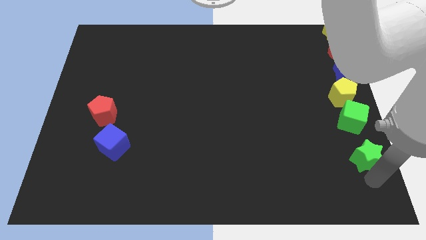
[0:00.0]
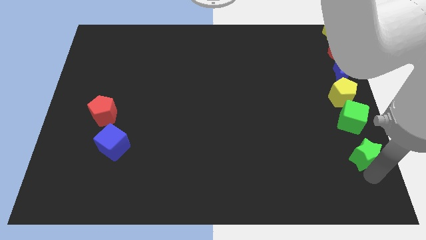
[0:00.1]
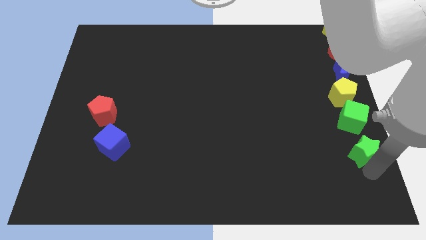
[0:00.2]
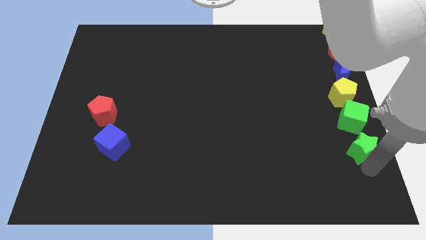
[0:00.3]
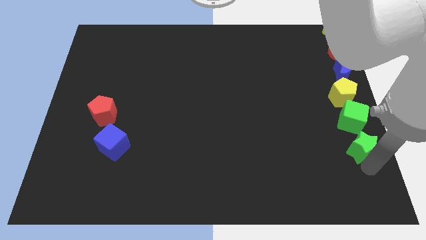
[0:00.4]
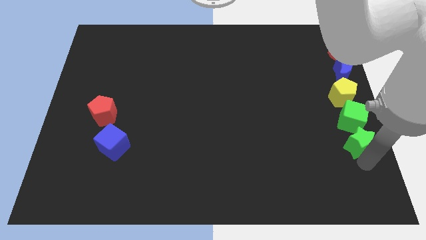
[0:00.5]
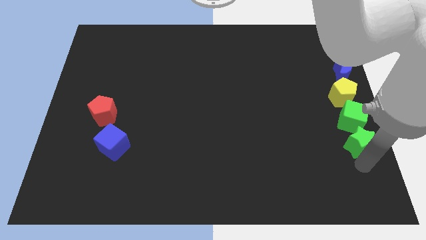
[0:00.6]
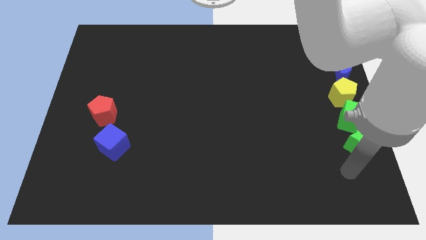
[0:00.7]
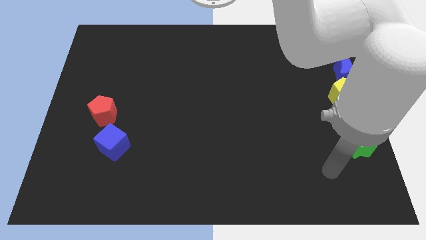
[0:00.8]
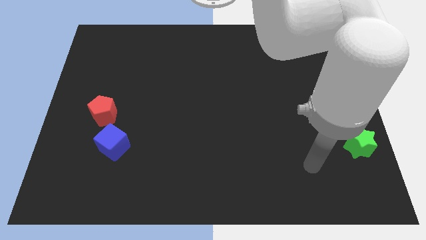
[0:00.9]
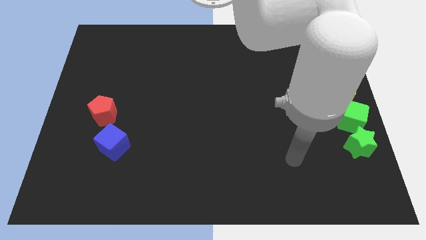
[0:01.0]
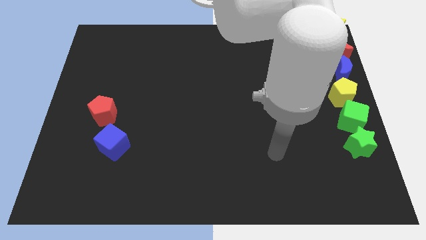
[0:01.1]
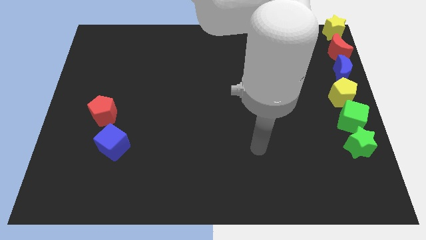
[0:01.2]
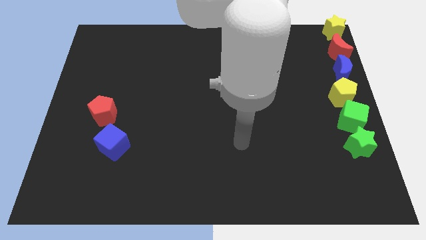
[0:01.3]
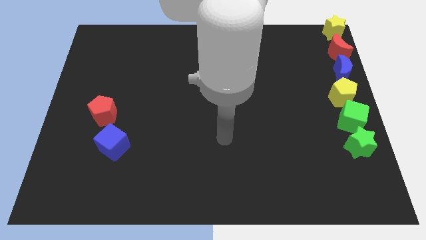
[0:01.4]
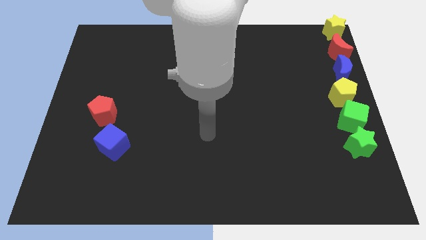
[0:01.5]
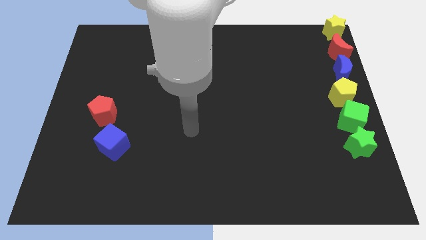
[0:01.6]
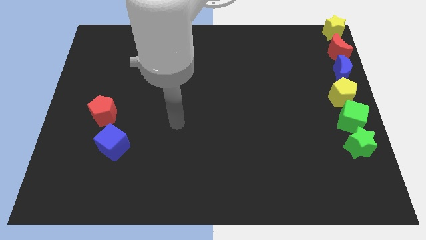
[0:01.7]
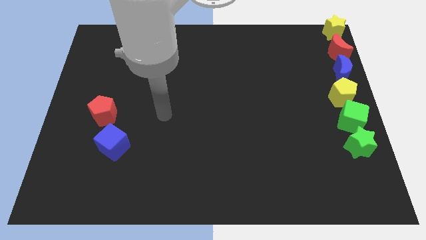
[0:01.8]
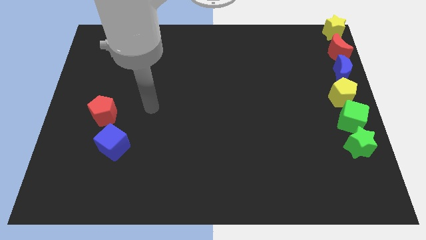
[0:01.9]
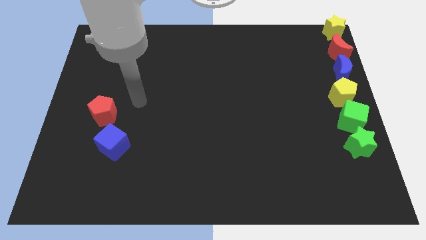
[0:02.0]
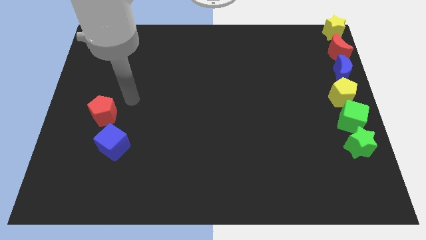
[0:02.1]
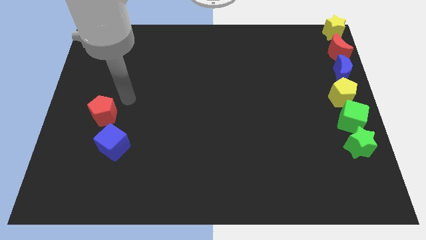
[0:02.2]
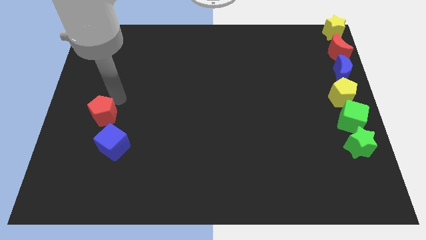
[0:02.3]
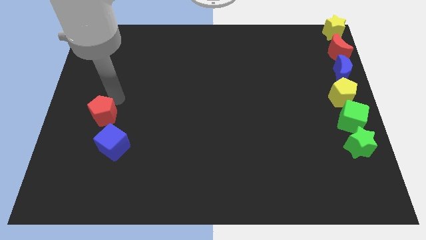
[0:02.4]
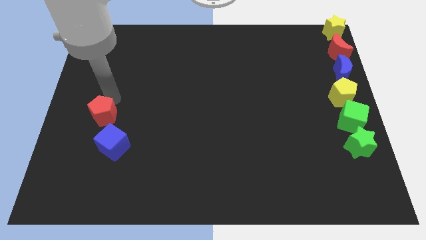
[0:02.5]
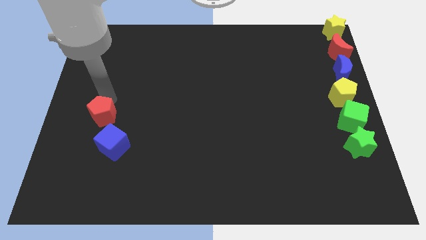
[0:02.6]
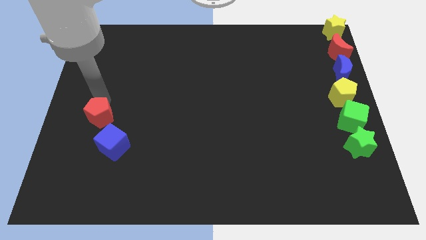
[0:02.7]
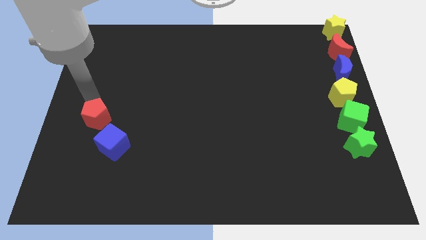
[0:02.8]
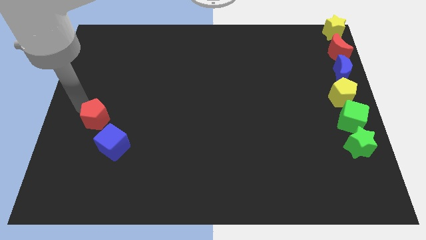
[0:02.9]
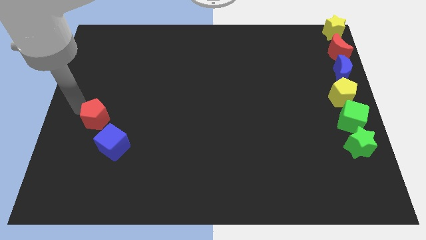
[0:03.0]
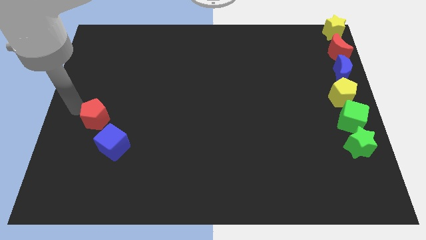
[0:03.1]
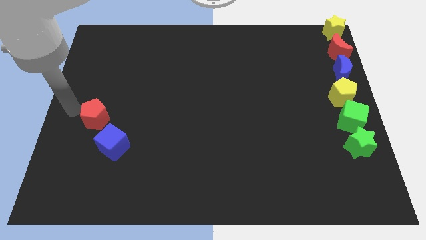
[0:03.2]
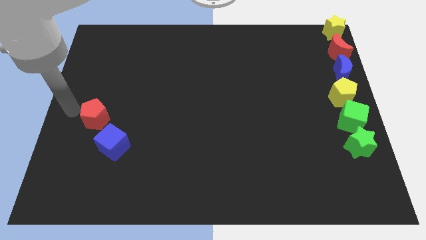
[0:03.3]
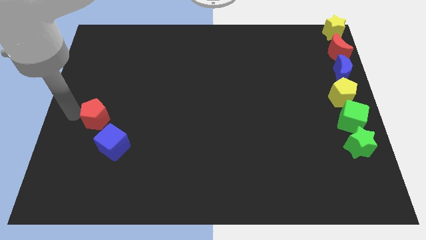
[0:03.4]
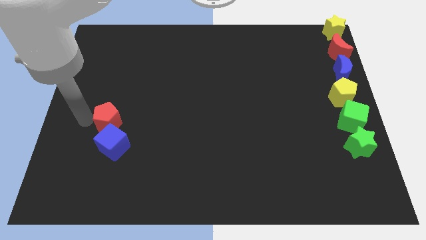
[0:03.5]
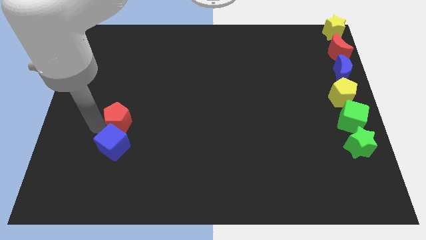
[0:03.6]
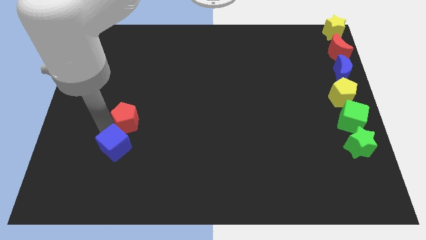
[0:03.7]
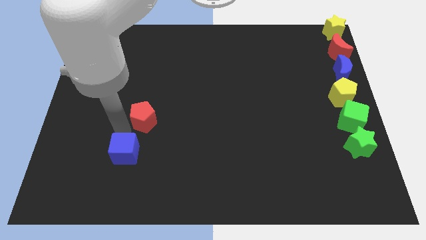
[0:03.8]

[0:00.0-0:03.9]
push the red pentagon into the blue cube

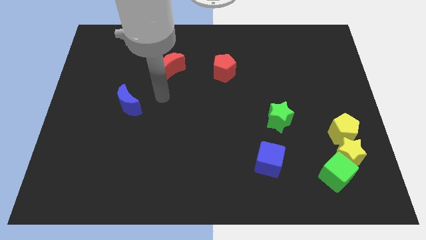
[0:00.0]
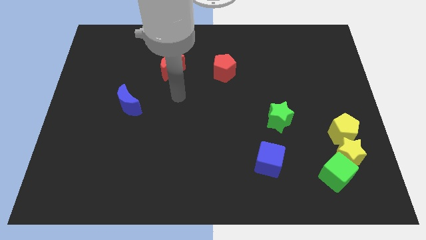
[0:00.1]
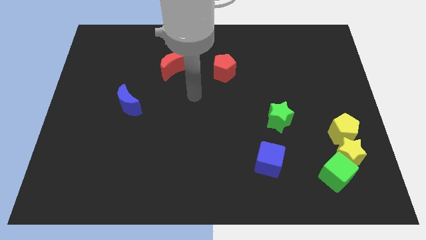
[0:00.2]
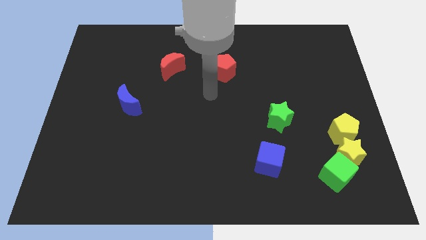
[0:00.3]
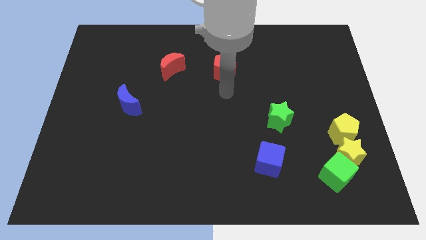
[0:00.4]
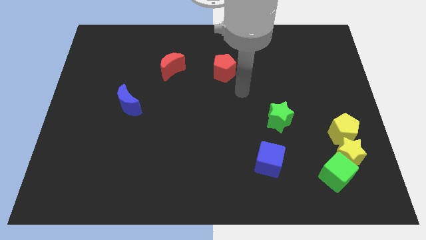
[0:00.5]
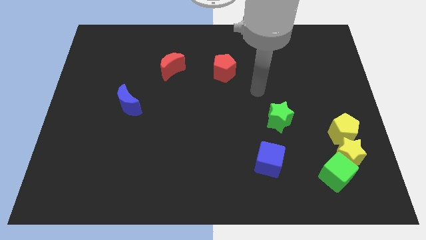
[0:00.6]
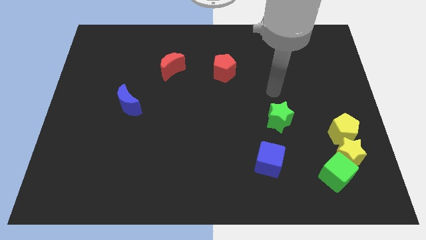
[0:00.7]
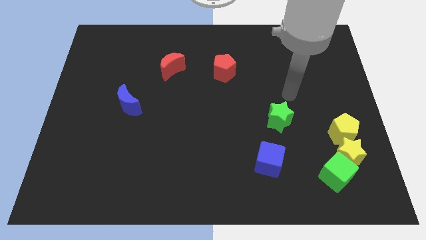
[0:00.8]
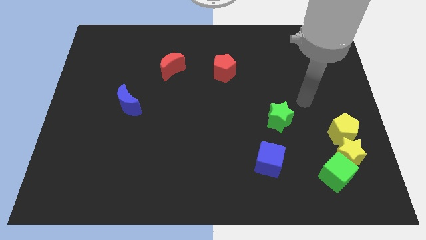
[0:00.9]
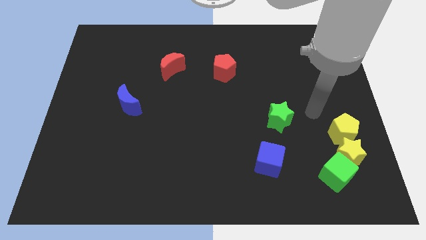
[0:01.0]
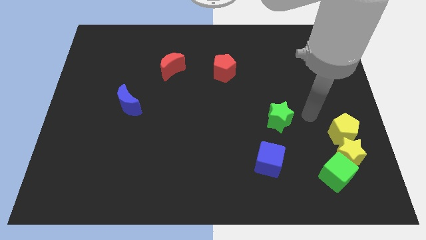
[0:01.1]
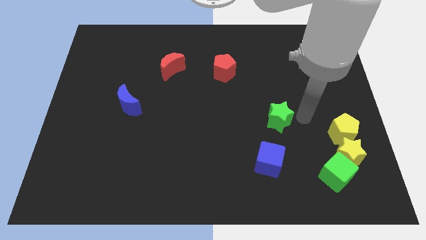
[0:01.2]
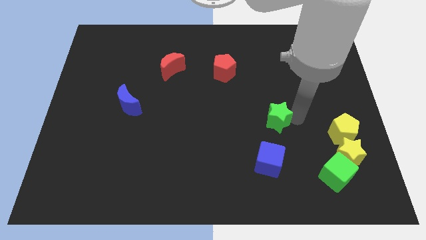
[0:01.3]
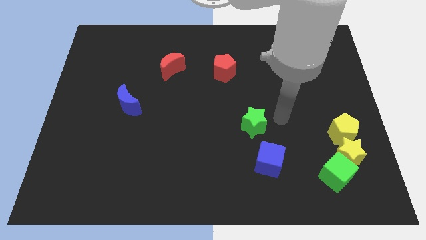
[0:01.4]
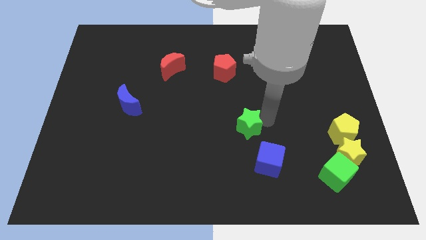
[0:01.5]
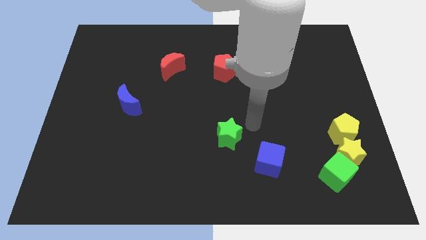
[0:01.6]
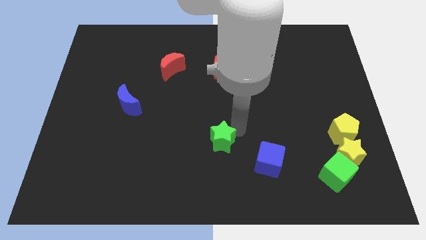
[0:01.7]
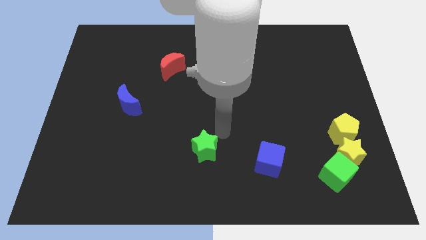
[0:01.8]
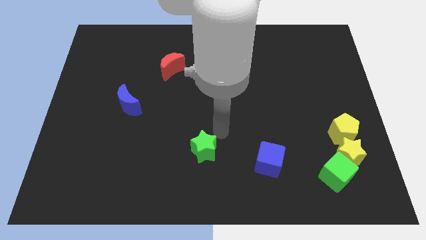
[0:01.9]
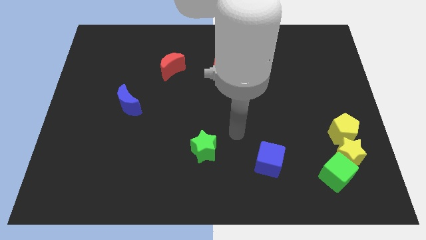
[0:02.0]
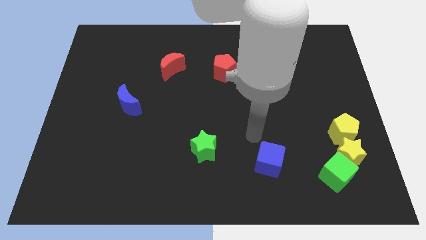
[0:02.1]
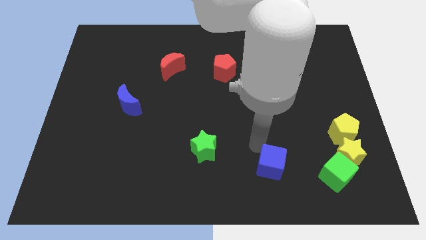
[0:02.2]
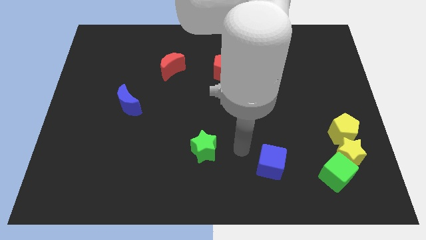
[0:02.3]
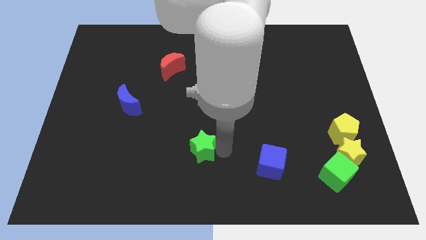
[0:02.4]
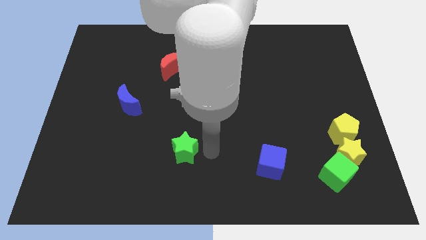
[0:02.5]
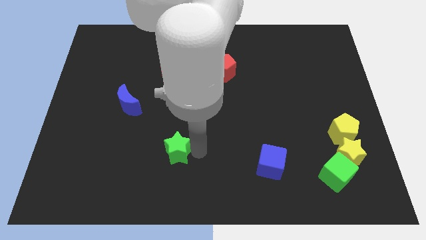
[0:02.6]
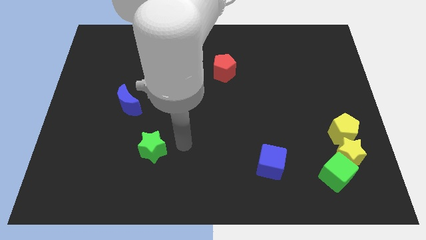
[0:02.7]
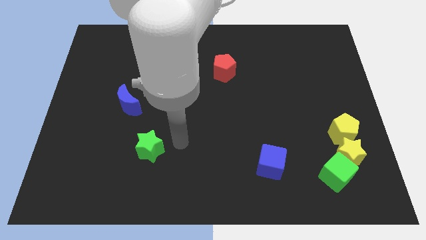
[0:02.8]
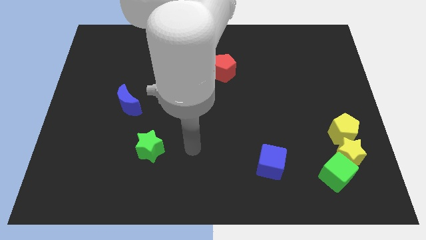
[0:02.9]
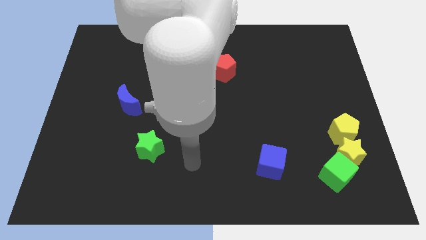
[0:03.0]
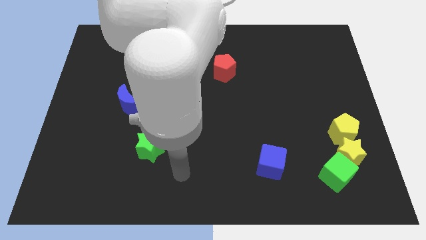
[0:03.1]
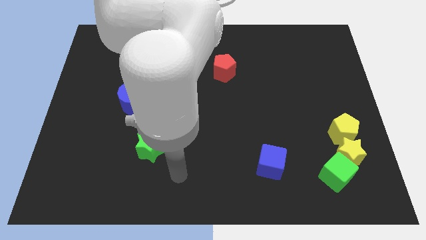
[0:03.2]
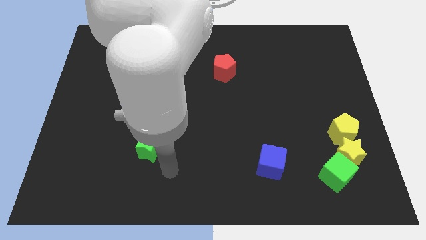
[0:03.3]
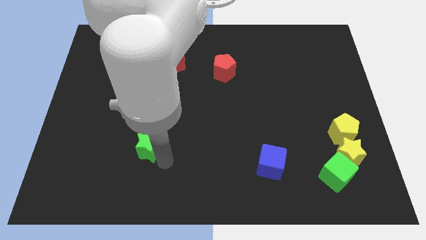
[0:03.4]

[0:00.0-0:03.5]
push the green star to the left of the blue cube

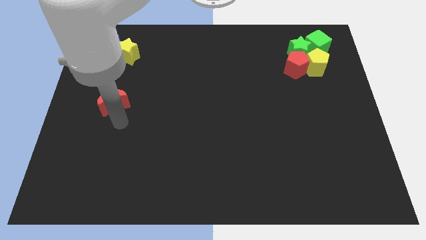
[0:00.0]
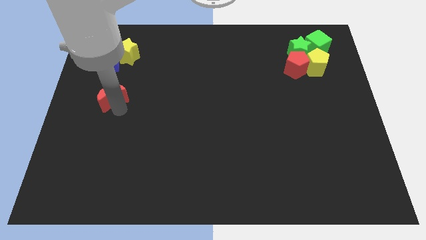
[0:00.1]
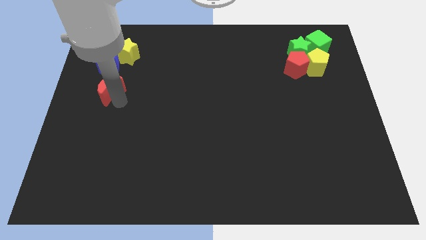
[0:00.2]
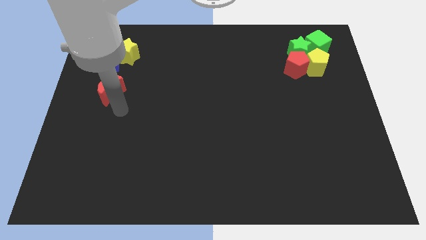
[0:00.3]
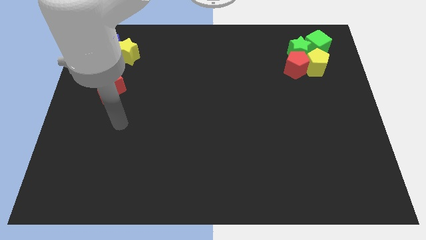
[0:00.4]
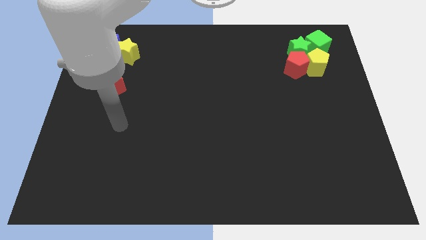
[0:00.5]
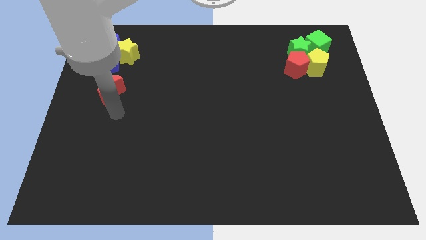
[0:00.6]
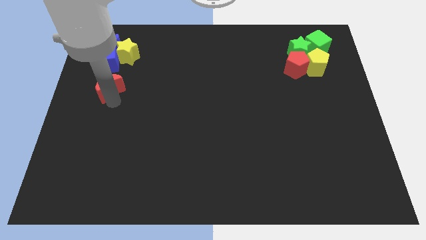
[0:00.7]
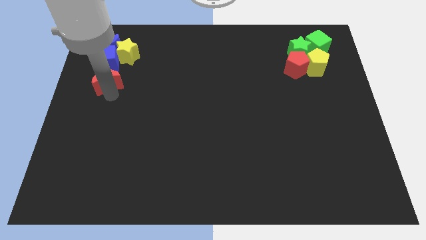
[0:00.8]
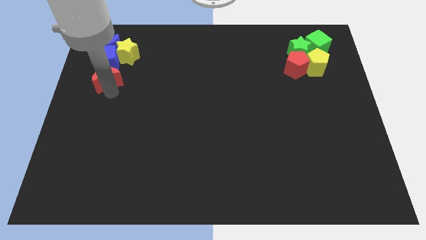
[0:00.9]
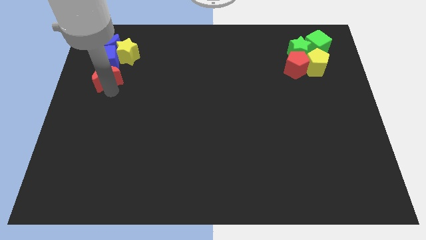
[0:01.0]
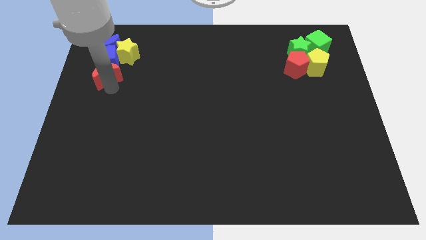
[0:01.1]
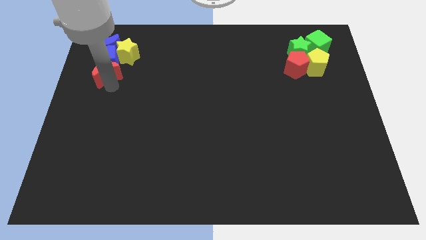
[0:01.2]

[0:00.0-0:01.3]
move the red crescent to the bottom of the blue cube

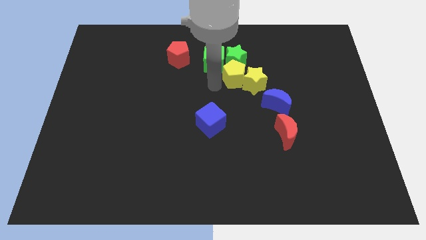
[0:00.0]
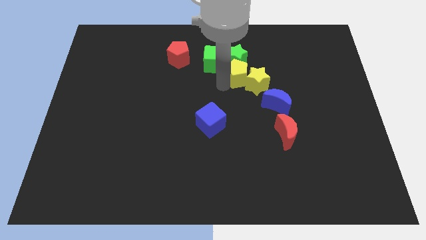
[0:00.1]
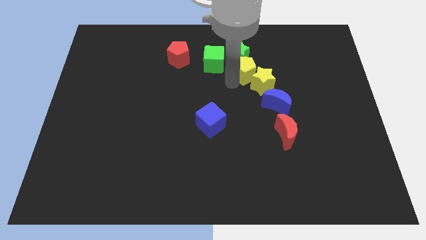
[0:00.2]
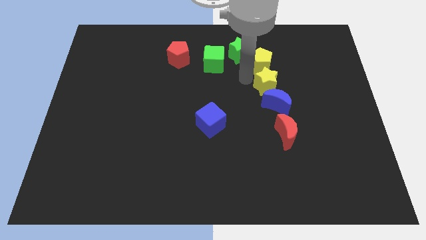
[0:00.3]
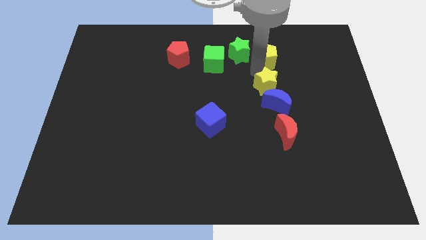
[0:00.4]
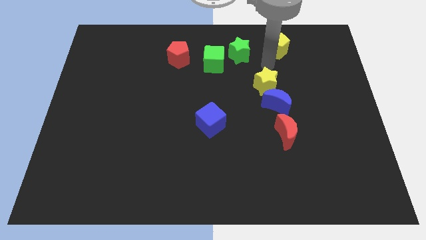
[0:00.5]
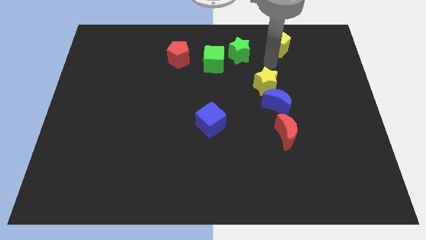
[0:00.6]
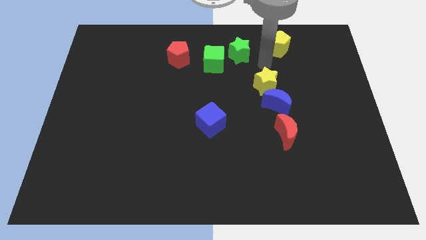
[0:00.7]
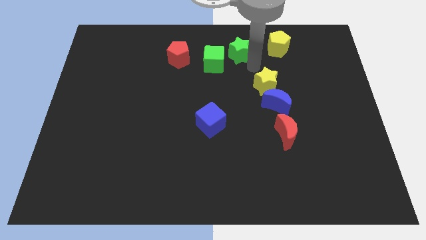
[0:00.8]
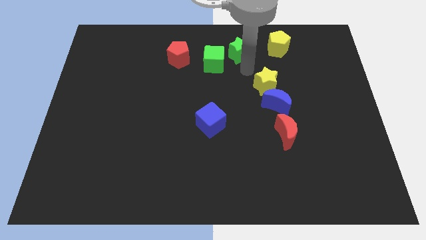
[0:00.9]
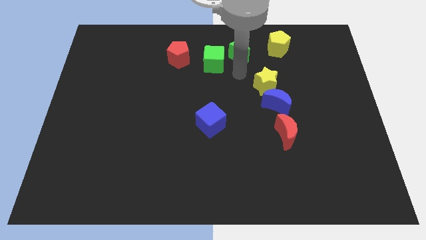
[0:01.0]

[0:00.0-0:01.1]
separate yellow blocks from green blocks
